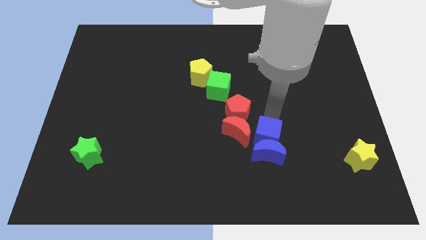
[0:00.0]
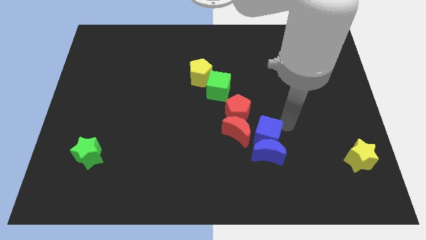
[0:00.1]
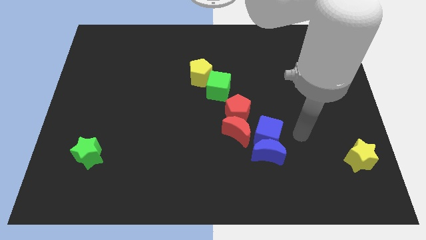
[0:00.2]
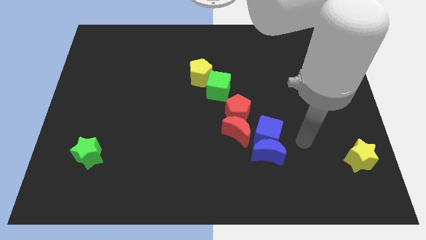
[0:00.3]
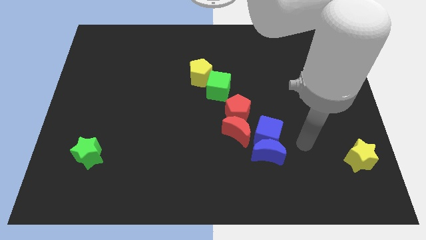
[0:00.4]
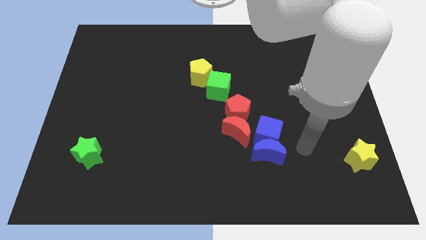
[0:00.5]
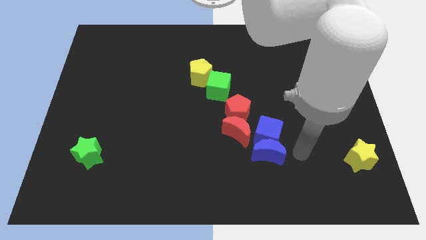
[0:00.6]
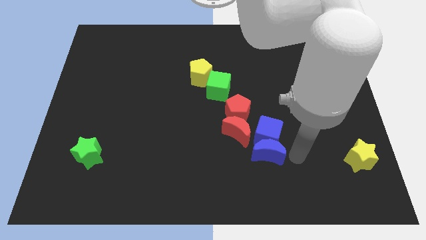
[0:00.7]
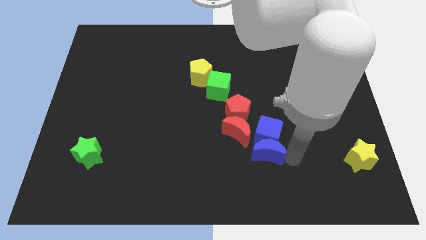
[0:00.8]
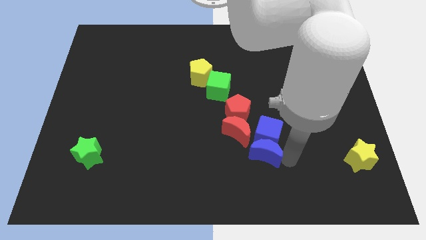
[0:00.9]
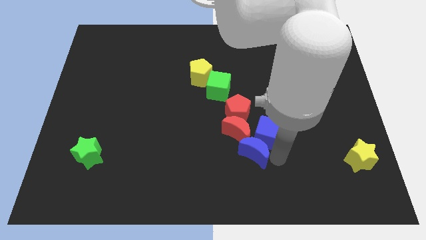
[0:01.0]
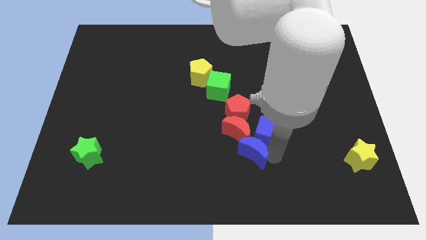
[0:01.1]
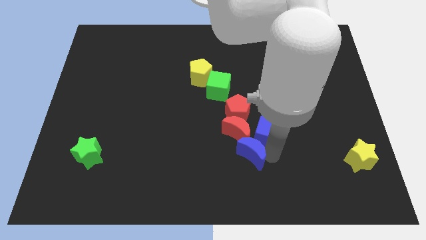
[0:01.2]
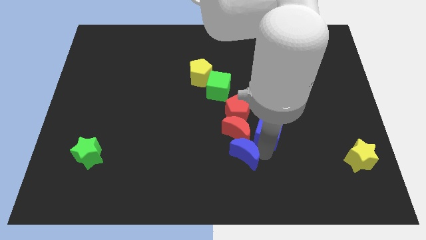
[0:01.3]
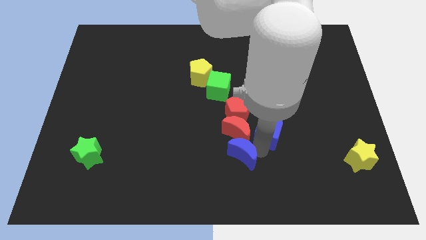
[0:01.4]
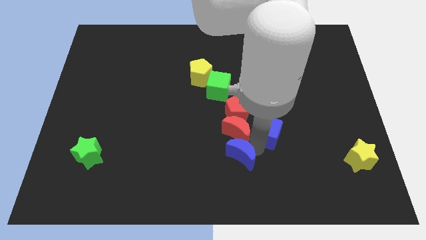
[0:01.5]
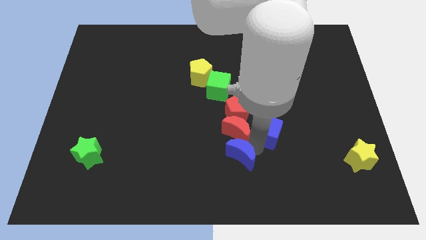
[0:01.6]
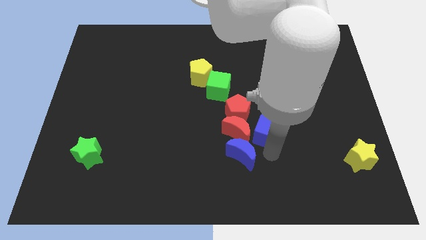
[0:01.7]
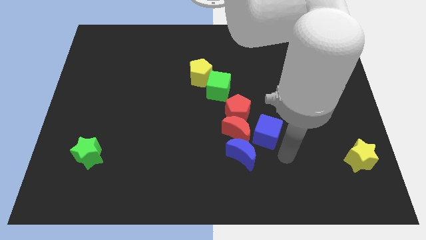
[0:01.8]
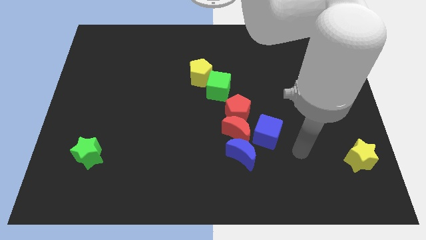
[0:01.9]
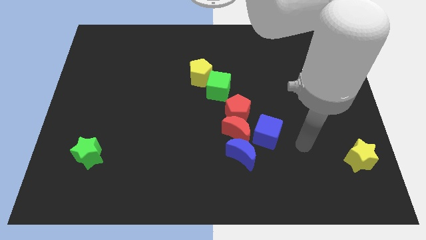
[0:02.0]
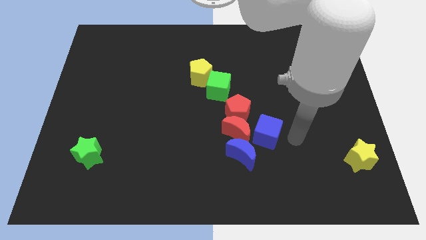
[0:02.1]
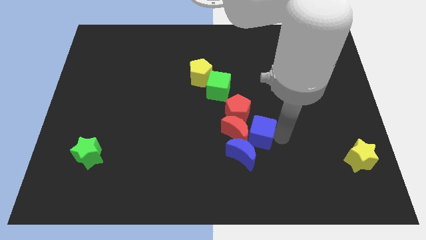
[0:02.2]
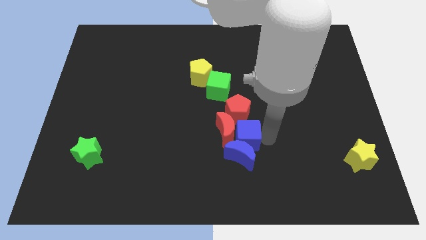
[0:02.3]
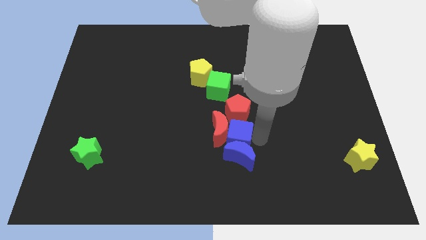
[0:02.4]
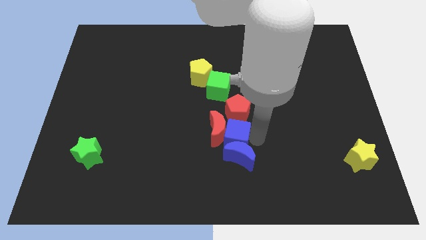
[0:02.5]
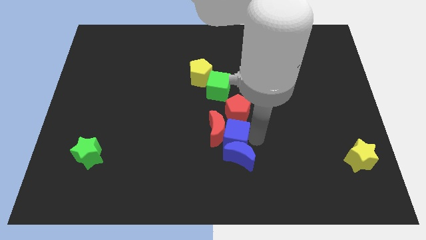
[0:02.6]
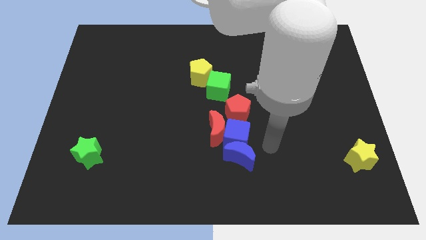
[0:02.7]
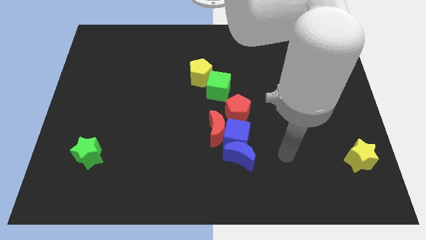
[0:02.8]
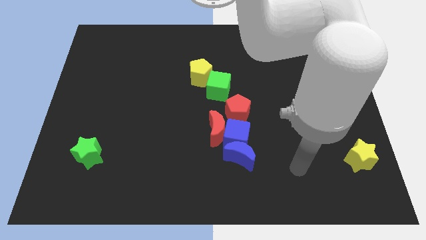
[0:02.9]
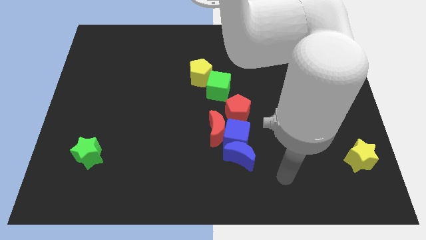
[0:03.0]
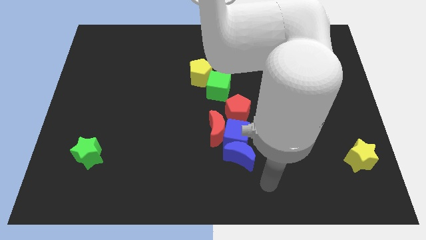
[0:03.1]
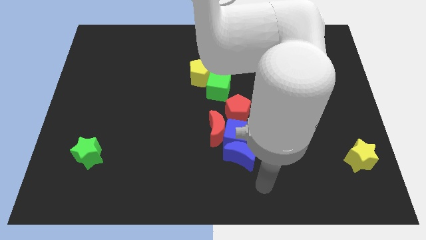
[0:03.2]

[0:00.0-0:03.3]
move the blue cube and blue crescent at the bottom of the red pentagon

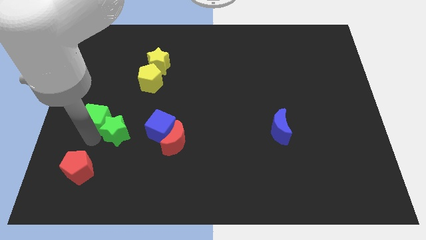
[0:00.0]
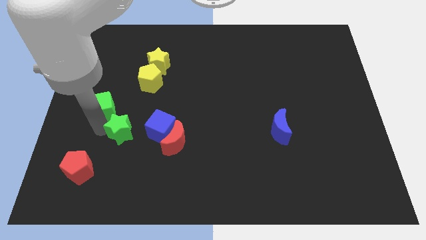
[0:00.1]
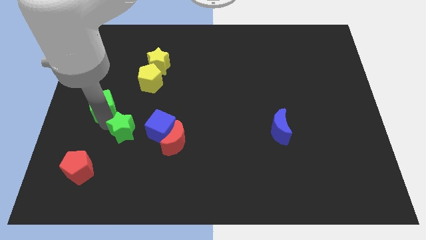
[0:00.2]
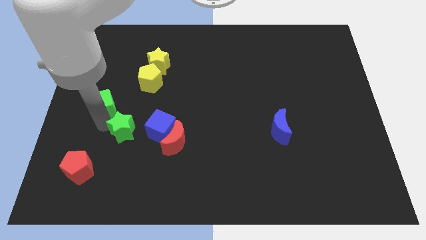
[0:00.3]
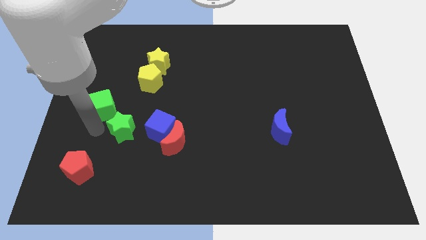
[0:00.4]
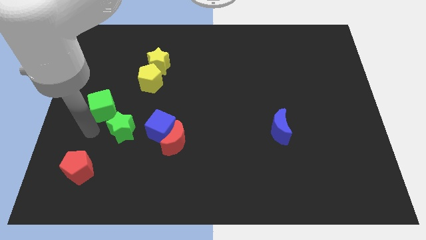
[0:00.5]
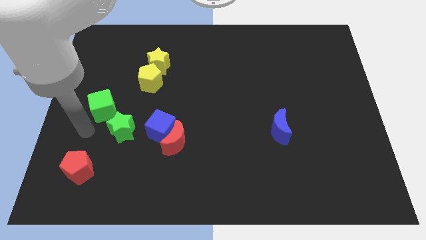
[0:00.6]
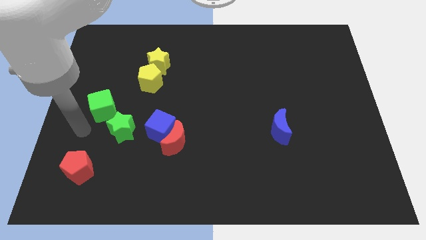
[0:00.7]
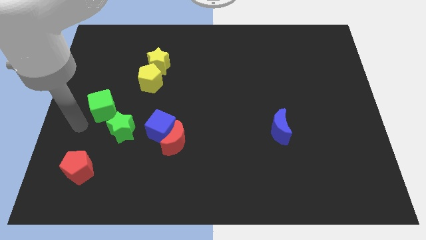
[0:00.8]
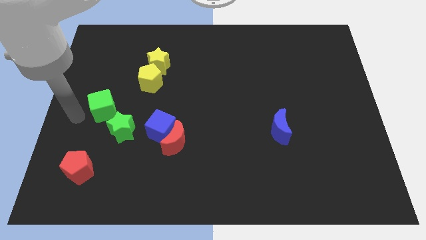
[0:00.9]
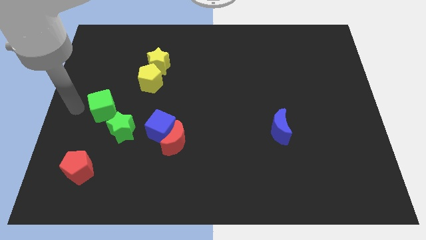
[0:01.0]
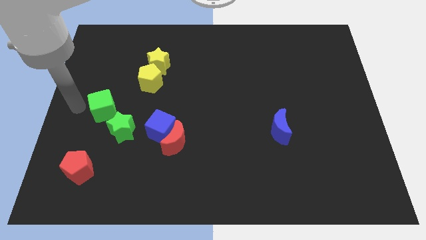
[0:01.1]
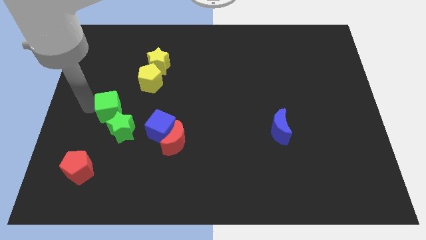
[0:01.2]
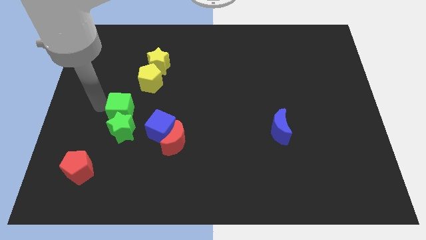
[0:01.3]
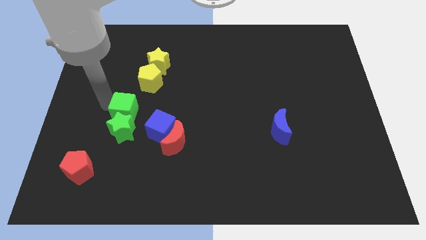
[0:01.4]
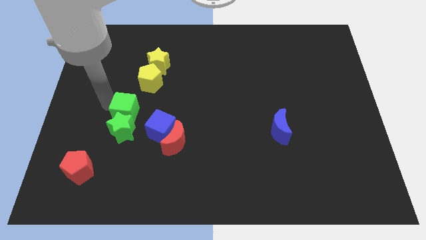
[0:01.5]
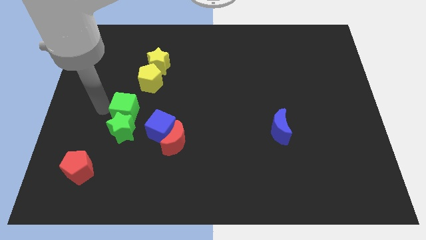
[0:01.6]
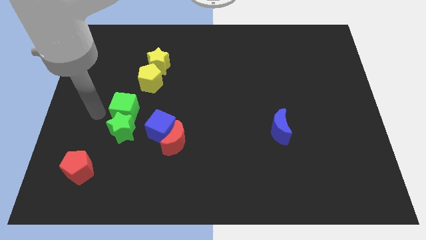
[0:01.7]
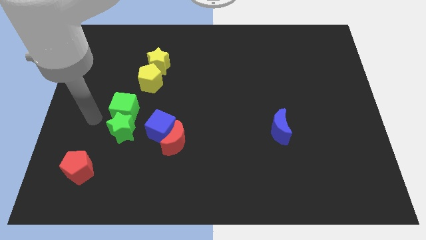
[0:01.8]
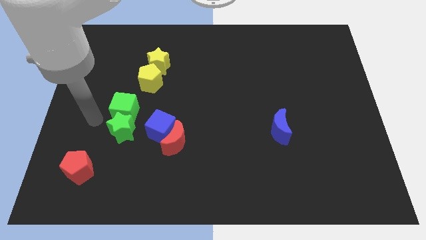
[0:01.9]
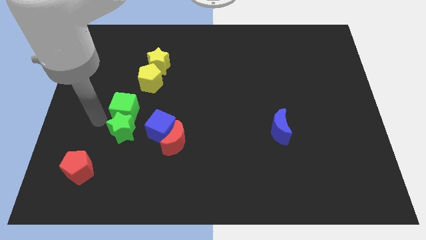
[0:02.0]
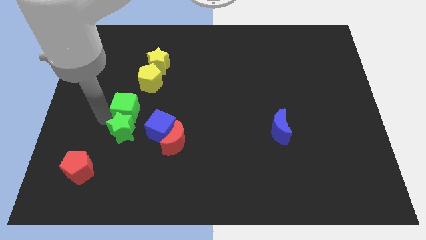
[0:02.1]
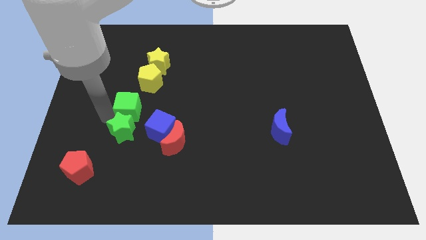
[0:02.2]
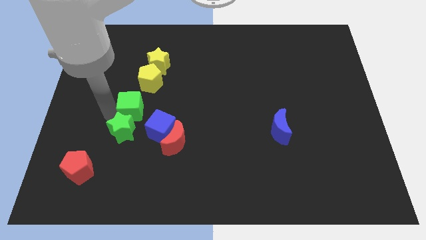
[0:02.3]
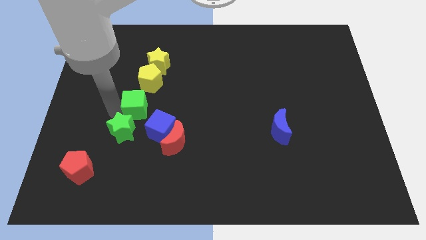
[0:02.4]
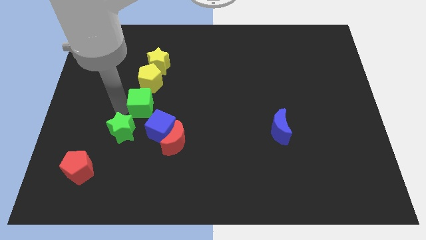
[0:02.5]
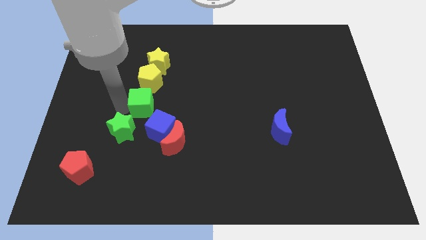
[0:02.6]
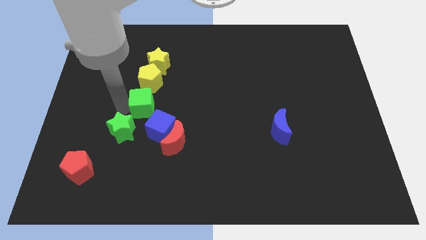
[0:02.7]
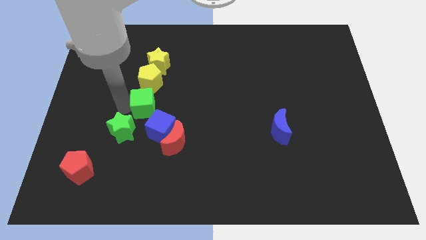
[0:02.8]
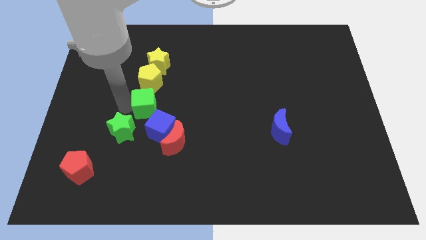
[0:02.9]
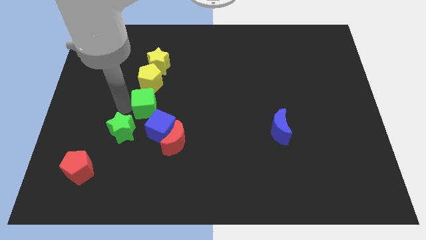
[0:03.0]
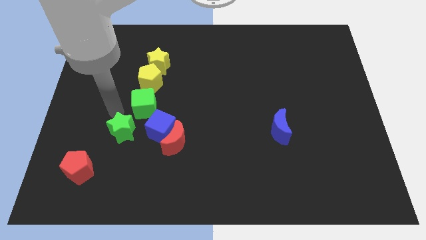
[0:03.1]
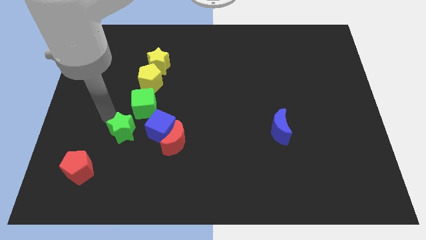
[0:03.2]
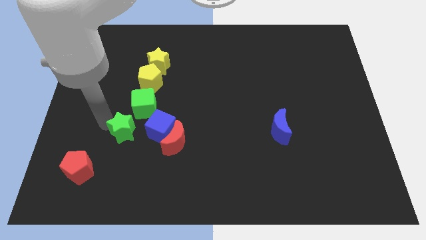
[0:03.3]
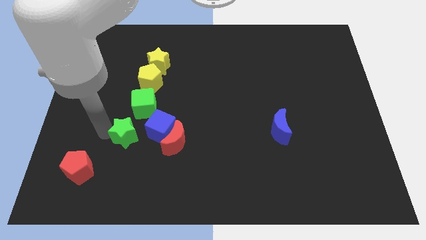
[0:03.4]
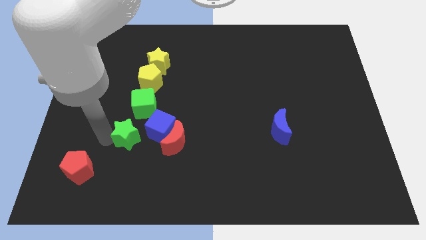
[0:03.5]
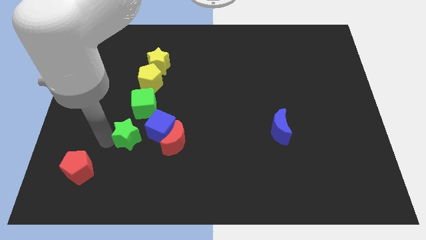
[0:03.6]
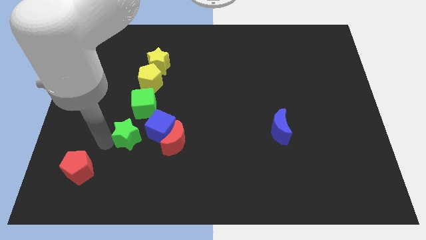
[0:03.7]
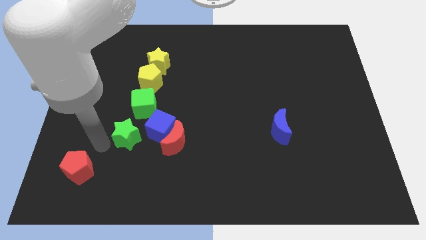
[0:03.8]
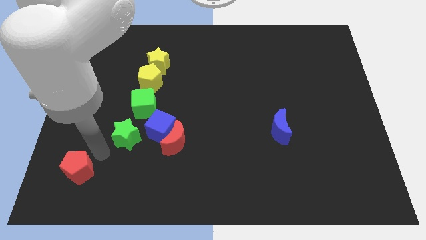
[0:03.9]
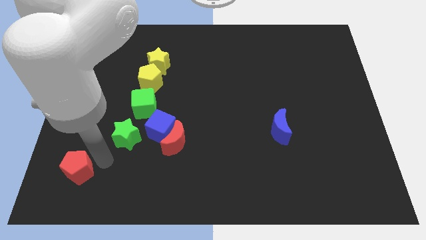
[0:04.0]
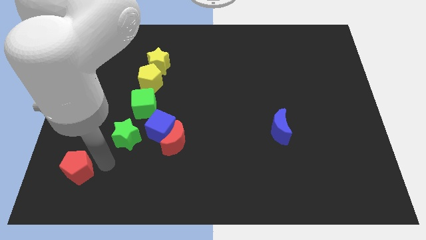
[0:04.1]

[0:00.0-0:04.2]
push the green cube to the bottom of yellow pentagon

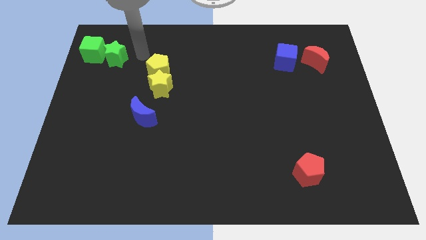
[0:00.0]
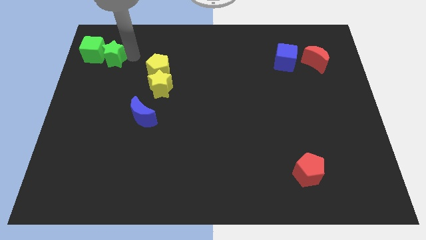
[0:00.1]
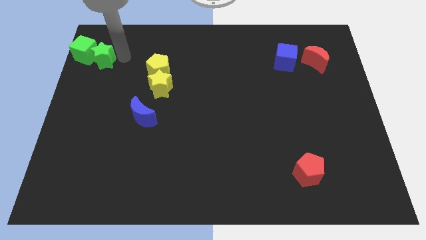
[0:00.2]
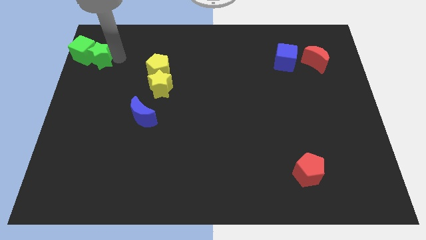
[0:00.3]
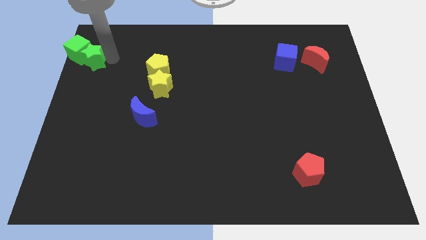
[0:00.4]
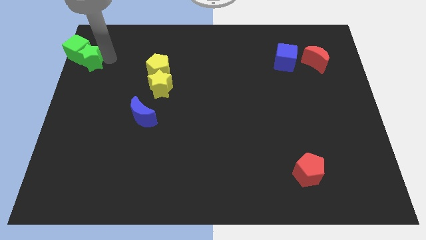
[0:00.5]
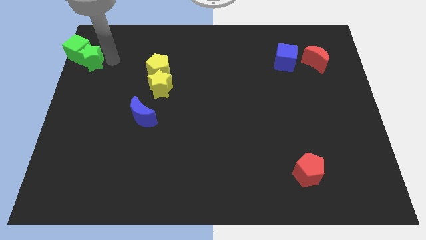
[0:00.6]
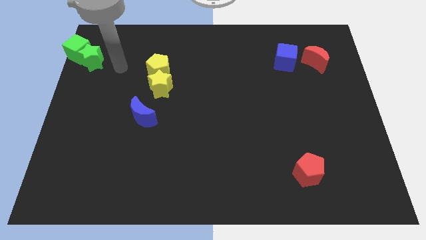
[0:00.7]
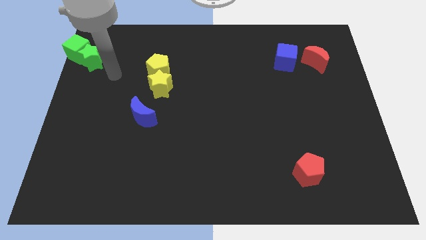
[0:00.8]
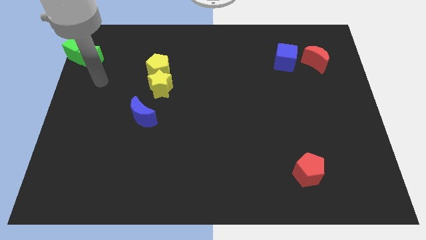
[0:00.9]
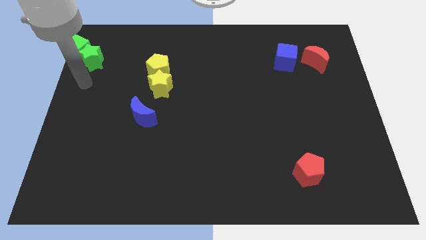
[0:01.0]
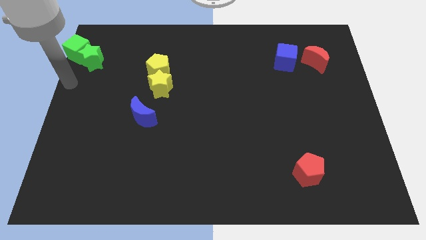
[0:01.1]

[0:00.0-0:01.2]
place the green blocks at the top left corner

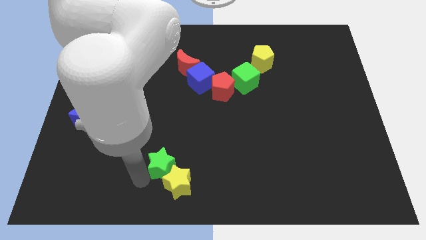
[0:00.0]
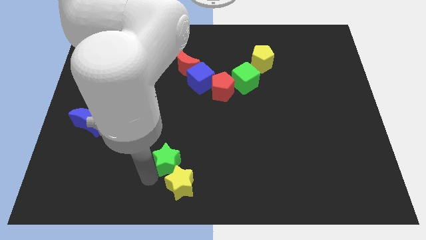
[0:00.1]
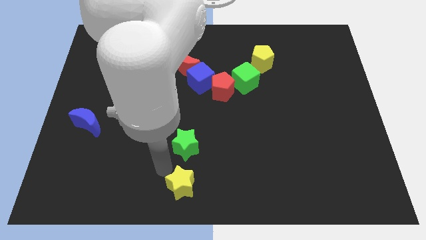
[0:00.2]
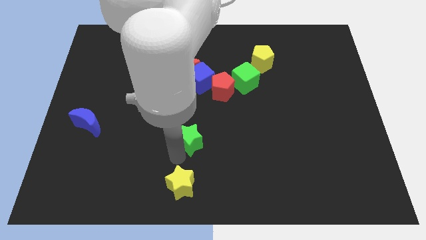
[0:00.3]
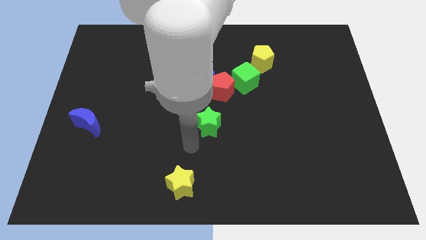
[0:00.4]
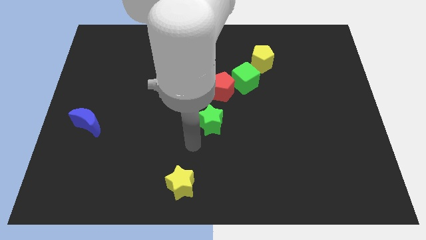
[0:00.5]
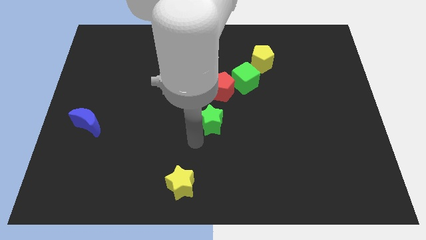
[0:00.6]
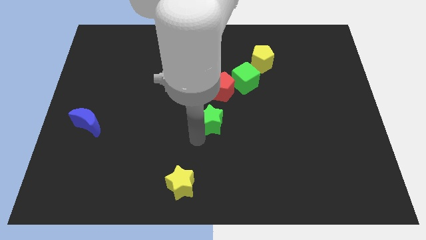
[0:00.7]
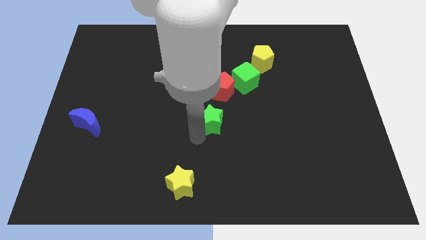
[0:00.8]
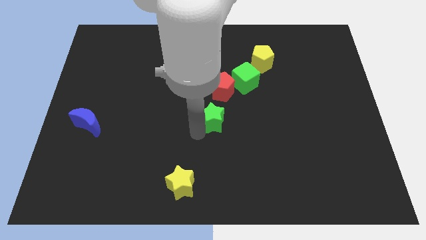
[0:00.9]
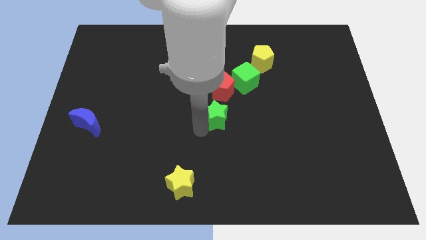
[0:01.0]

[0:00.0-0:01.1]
move green star below the red pentagon
